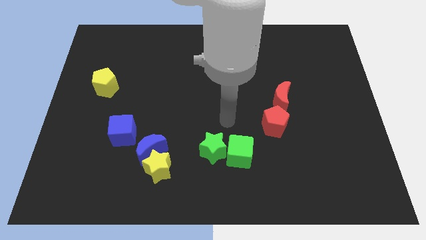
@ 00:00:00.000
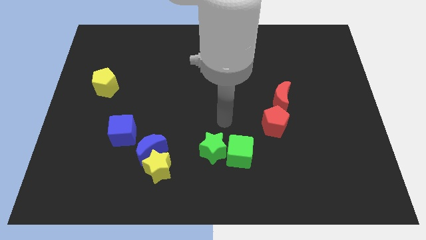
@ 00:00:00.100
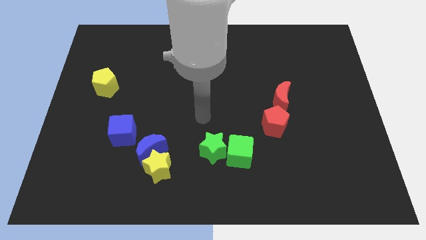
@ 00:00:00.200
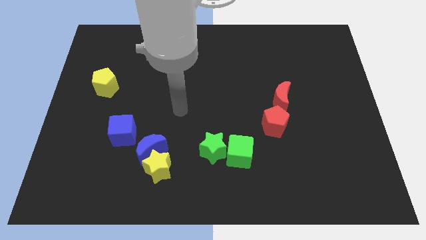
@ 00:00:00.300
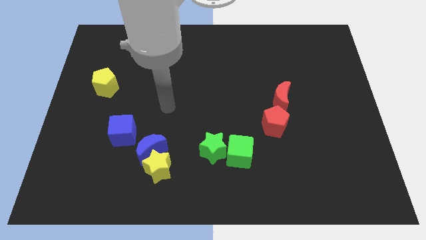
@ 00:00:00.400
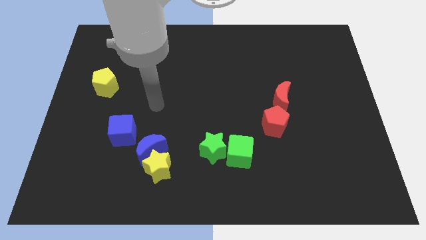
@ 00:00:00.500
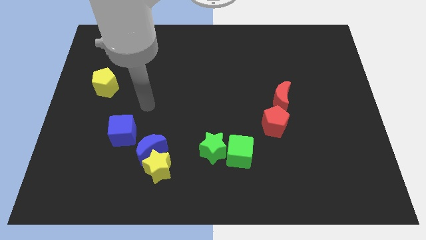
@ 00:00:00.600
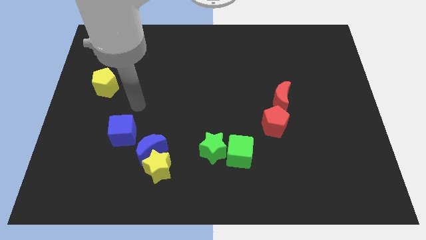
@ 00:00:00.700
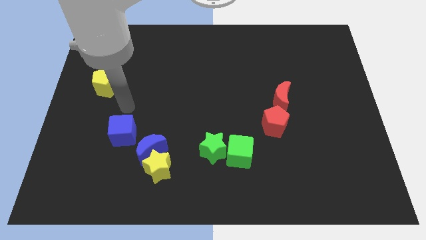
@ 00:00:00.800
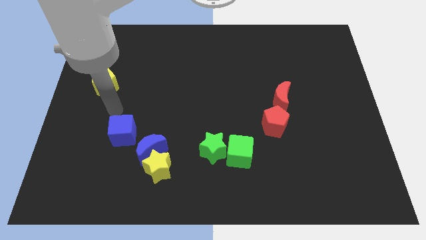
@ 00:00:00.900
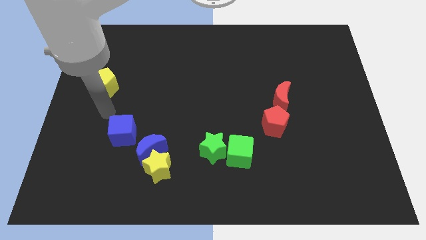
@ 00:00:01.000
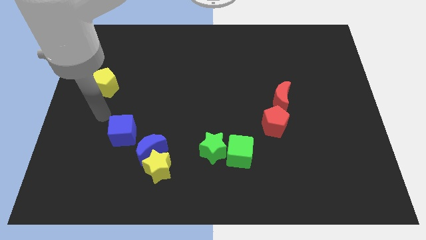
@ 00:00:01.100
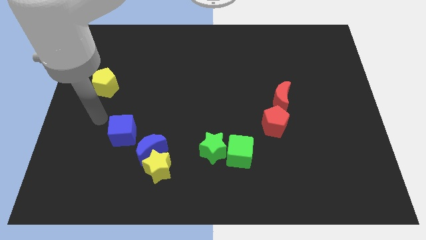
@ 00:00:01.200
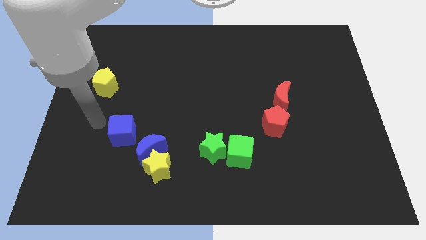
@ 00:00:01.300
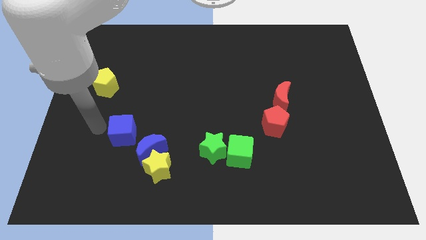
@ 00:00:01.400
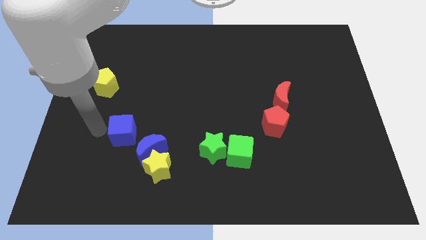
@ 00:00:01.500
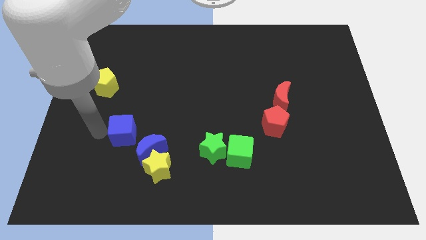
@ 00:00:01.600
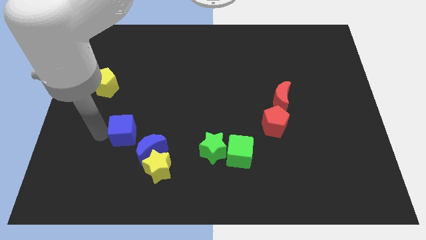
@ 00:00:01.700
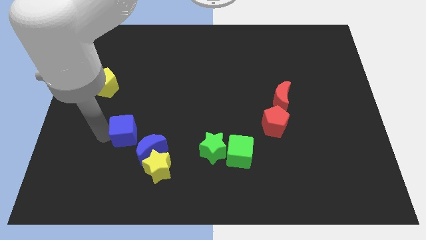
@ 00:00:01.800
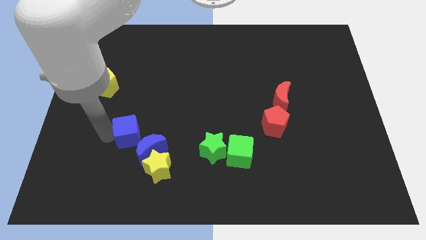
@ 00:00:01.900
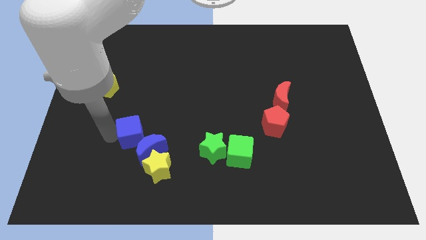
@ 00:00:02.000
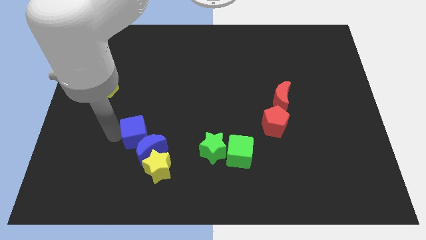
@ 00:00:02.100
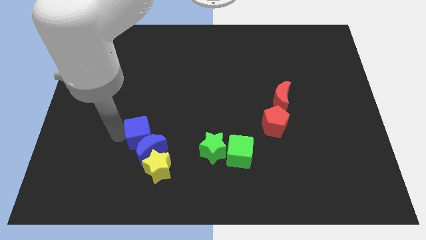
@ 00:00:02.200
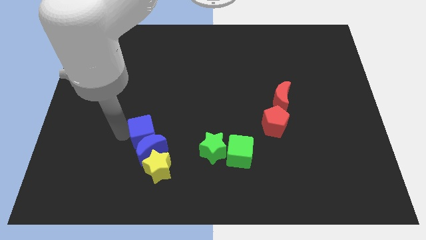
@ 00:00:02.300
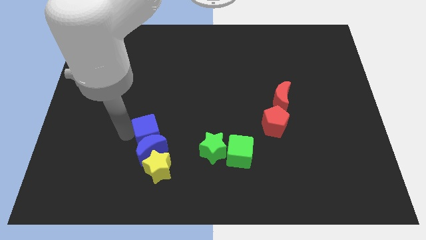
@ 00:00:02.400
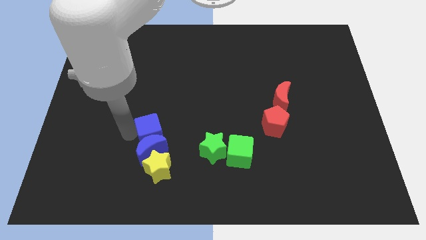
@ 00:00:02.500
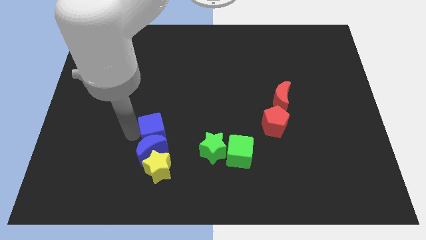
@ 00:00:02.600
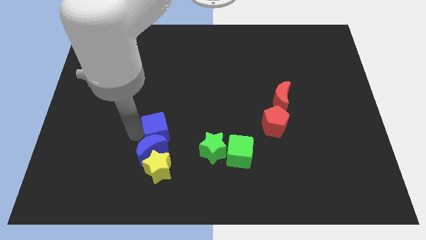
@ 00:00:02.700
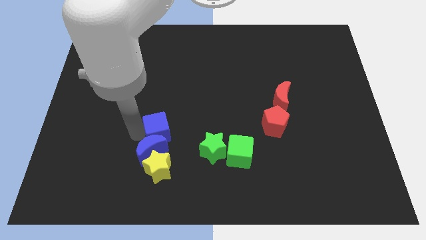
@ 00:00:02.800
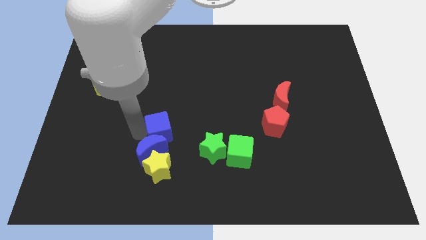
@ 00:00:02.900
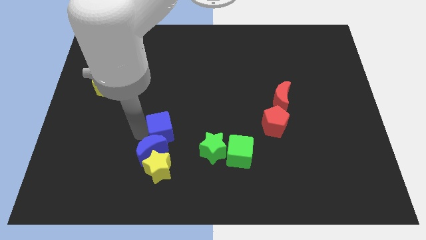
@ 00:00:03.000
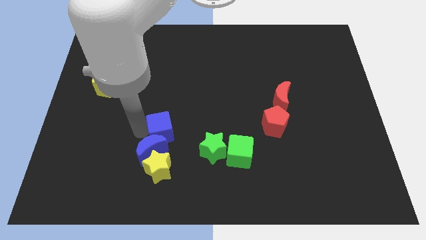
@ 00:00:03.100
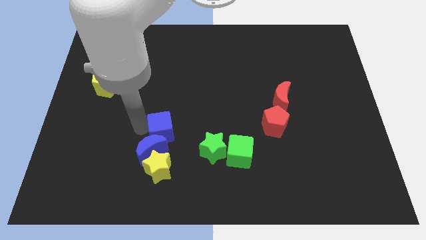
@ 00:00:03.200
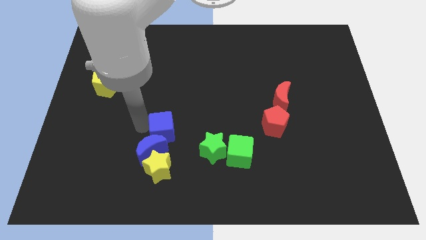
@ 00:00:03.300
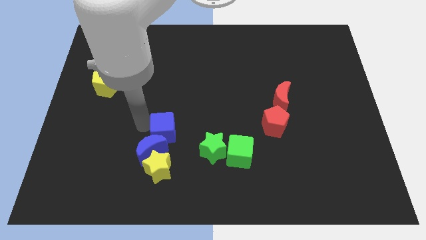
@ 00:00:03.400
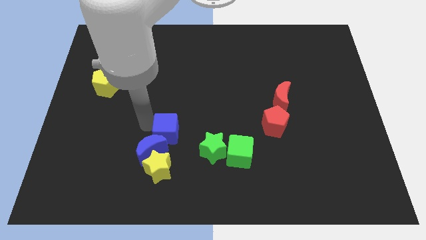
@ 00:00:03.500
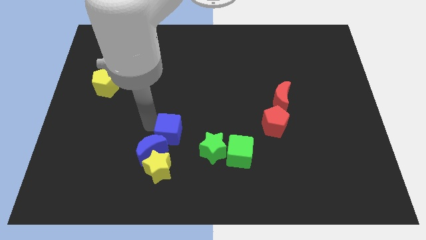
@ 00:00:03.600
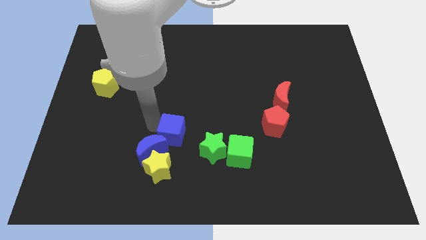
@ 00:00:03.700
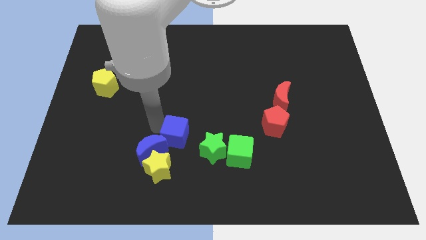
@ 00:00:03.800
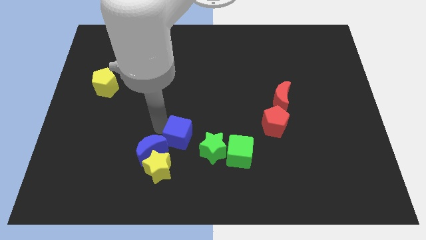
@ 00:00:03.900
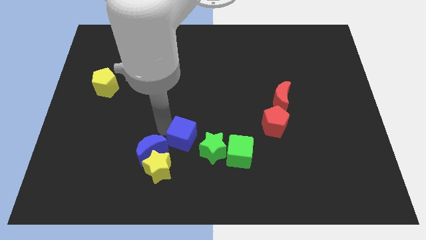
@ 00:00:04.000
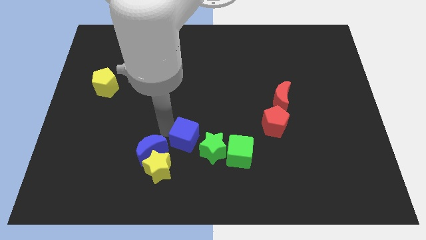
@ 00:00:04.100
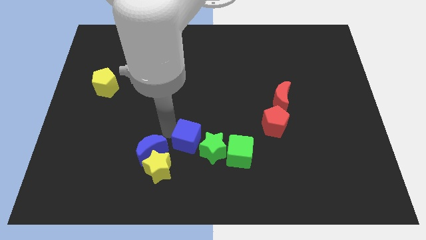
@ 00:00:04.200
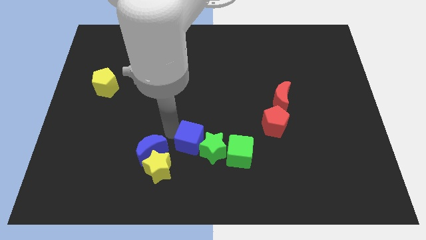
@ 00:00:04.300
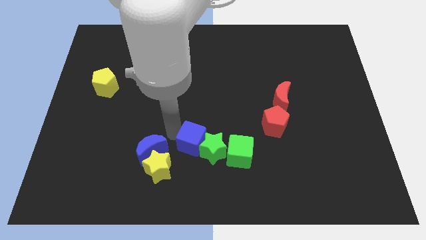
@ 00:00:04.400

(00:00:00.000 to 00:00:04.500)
slide the blue cube towards the green star

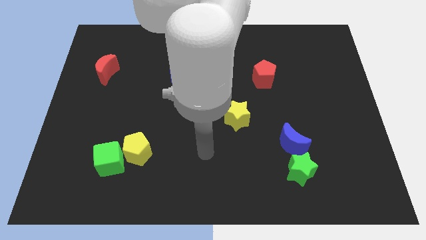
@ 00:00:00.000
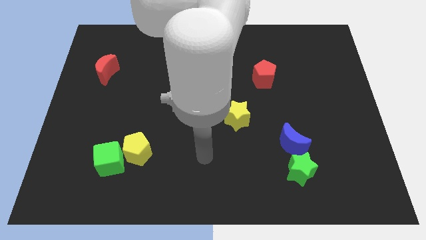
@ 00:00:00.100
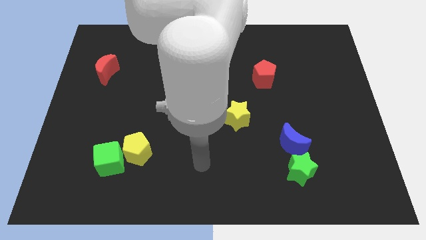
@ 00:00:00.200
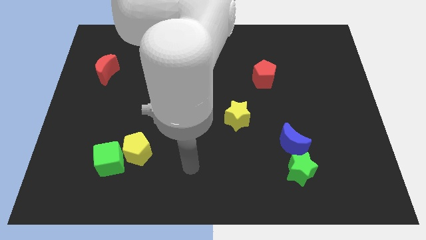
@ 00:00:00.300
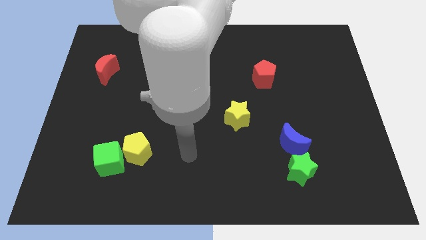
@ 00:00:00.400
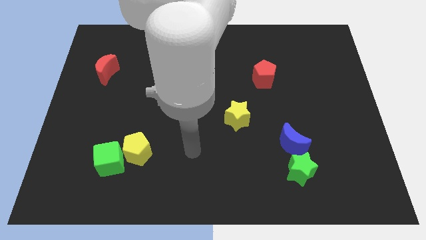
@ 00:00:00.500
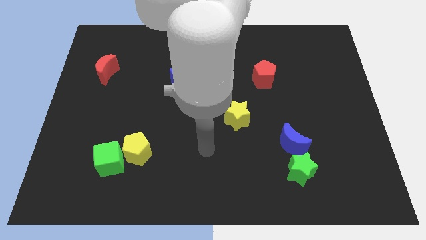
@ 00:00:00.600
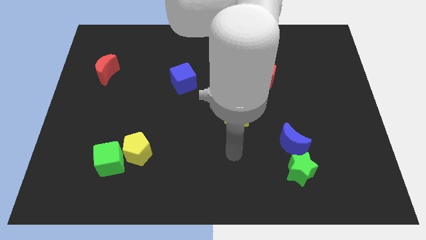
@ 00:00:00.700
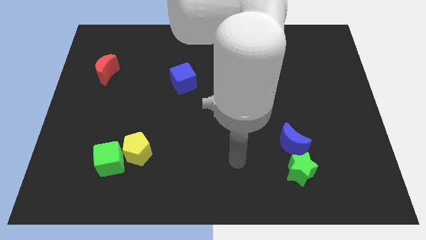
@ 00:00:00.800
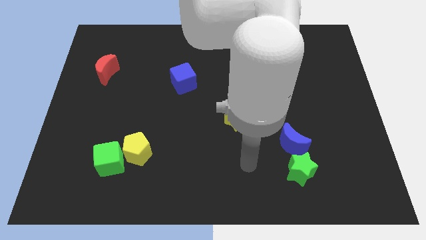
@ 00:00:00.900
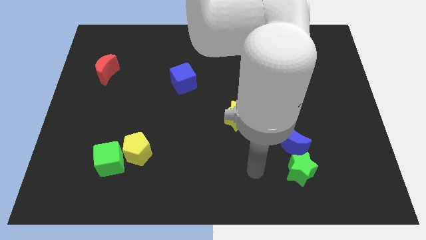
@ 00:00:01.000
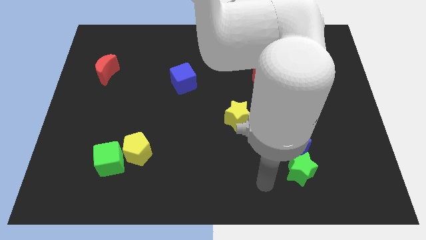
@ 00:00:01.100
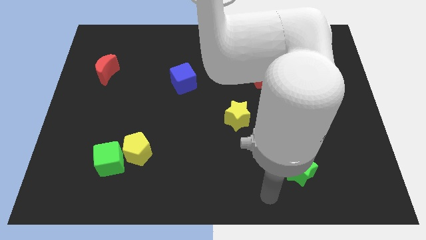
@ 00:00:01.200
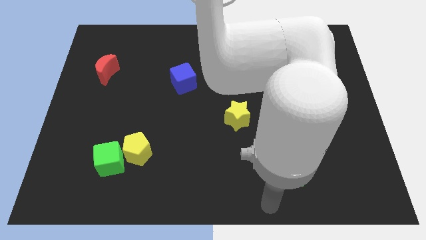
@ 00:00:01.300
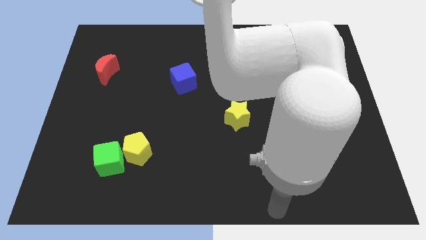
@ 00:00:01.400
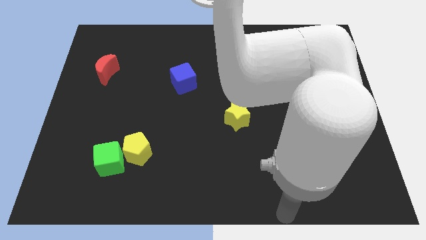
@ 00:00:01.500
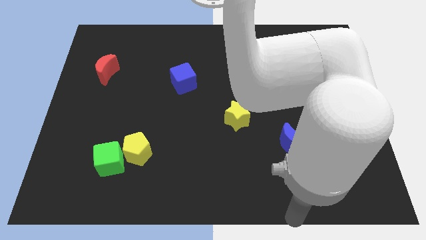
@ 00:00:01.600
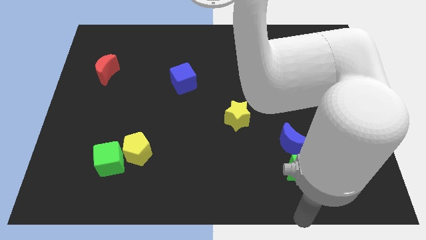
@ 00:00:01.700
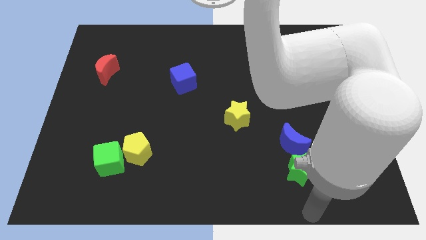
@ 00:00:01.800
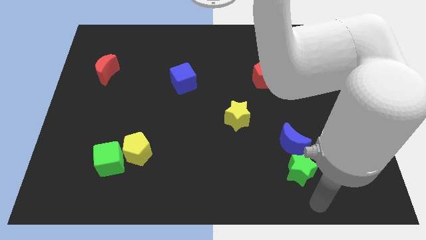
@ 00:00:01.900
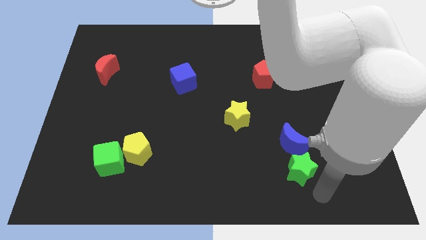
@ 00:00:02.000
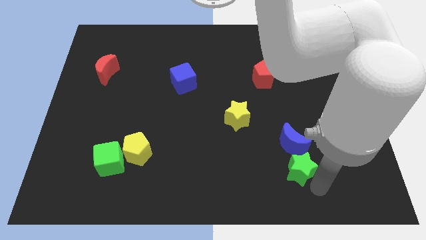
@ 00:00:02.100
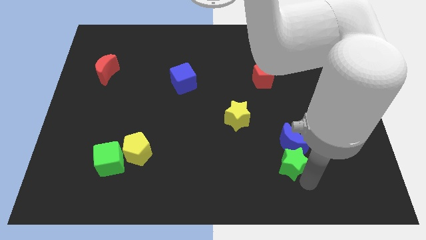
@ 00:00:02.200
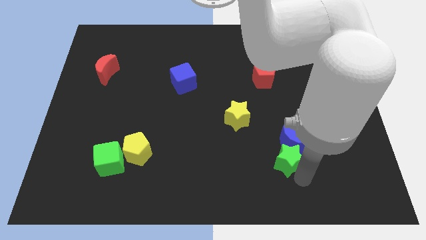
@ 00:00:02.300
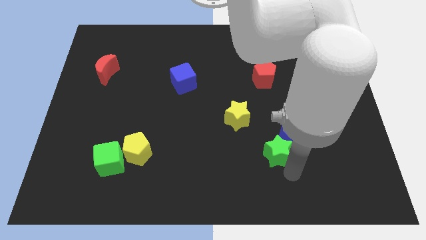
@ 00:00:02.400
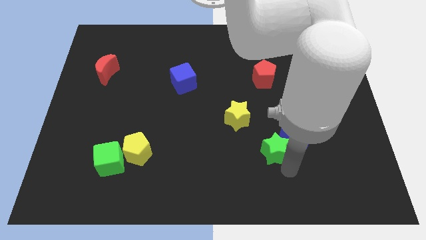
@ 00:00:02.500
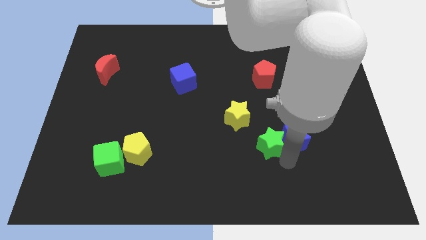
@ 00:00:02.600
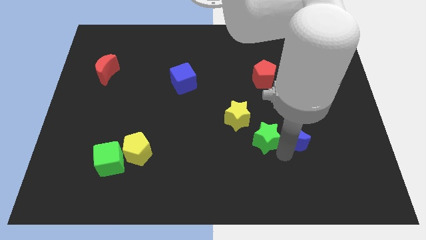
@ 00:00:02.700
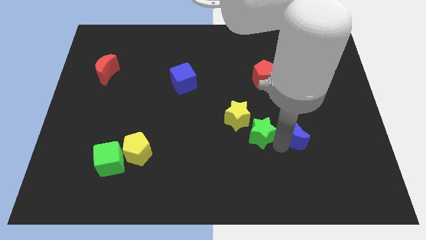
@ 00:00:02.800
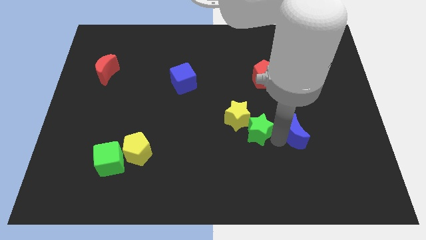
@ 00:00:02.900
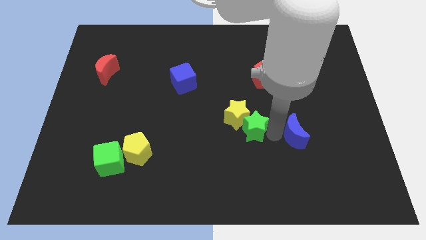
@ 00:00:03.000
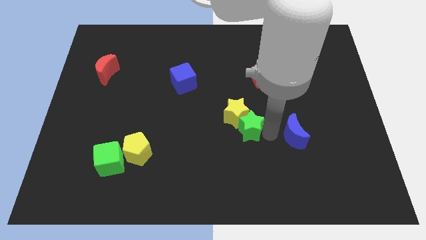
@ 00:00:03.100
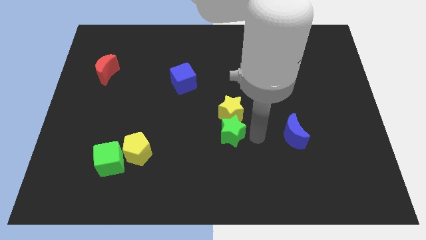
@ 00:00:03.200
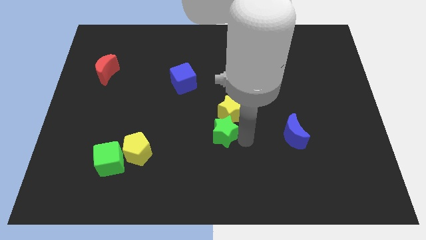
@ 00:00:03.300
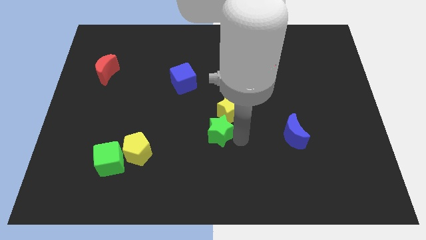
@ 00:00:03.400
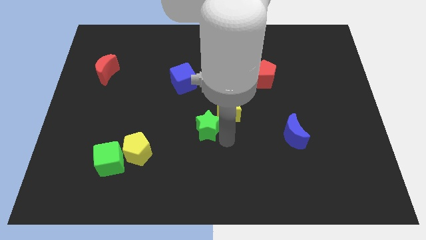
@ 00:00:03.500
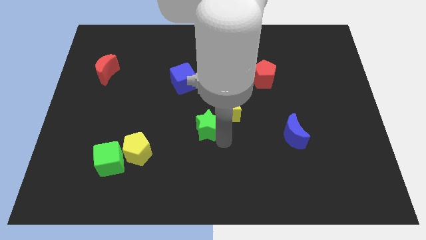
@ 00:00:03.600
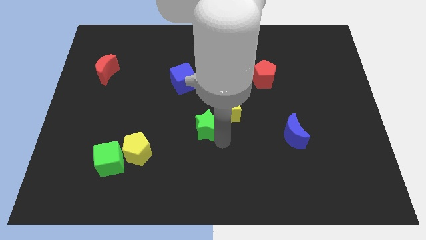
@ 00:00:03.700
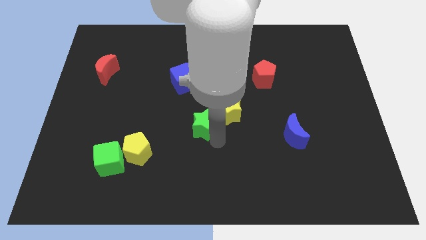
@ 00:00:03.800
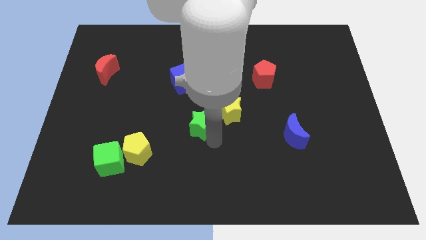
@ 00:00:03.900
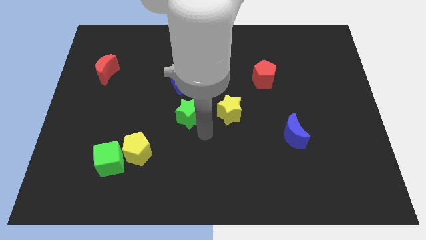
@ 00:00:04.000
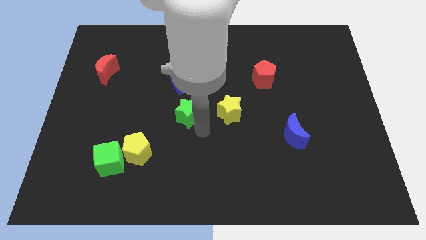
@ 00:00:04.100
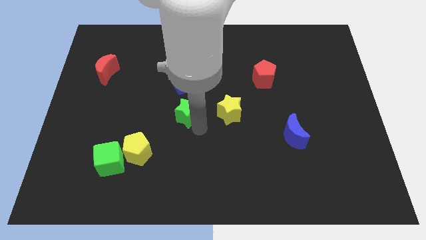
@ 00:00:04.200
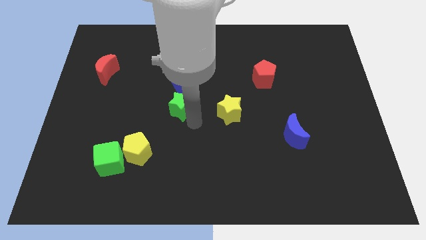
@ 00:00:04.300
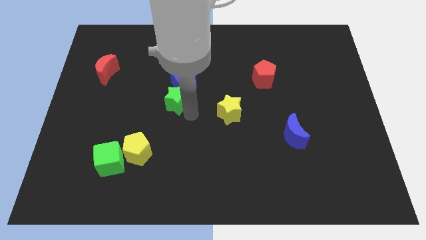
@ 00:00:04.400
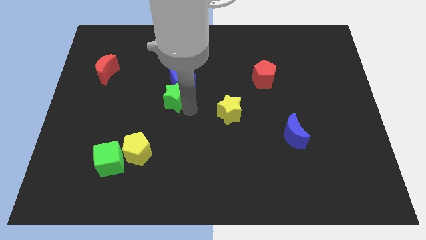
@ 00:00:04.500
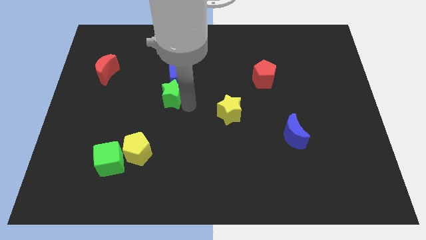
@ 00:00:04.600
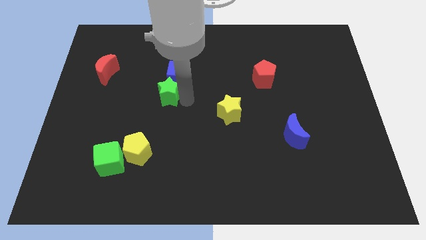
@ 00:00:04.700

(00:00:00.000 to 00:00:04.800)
move the green star to the blue cube
